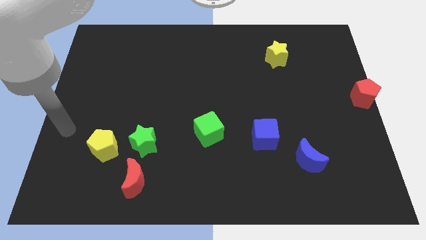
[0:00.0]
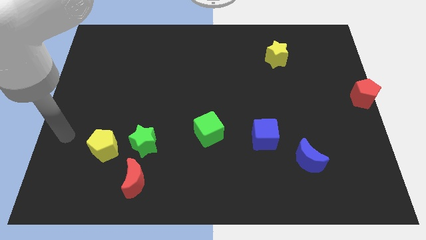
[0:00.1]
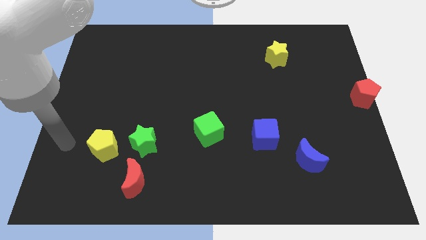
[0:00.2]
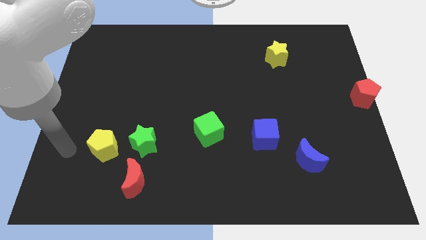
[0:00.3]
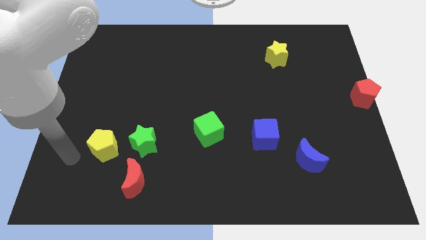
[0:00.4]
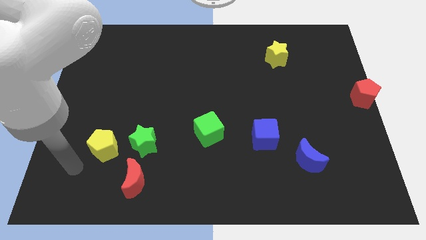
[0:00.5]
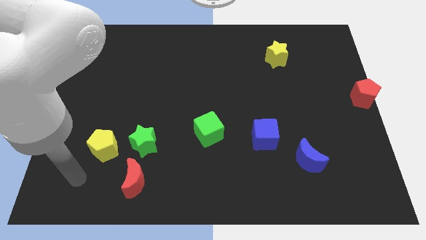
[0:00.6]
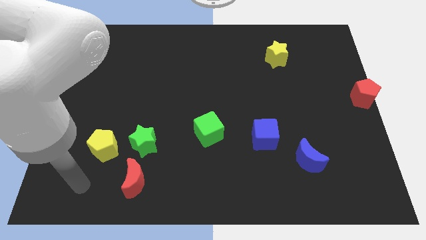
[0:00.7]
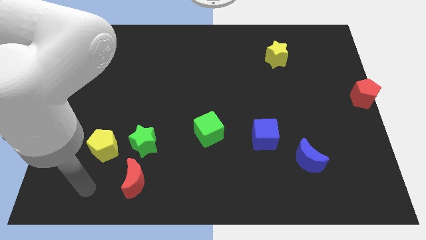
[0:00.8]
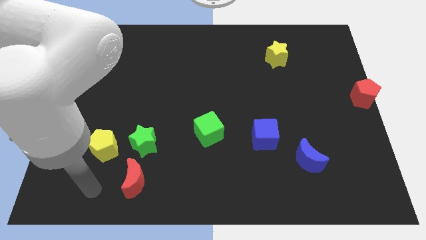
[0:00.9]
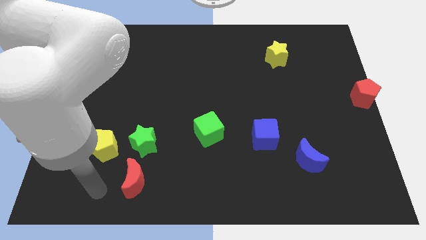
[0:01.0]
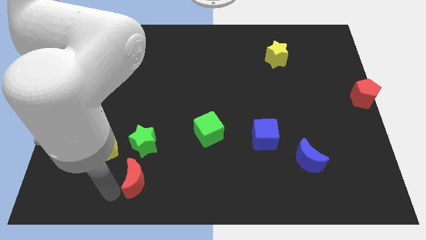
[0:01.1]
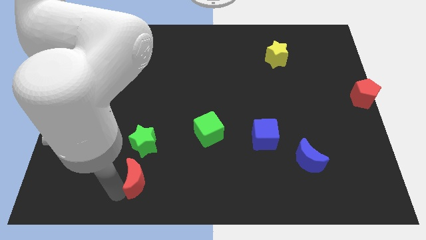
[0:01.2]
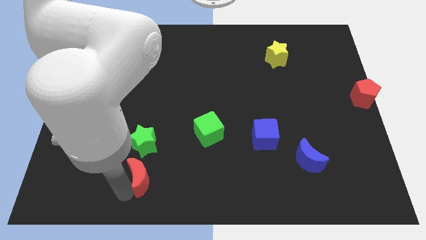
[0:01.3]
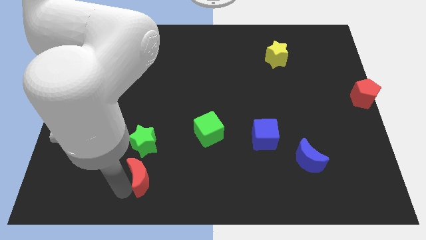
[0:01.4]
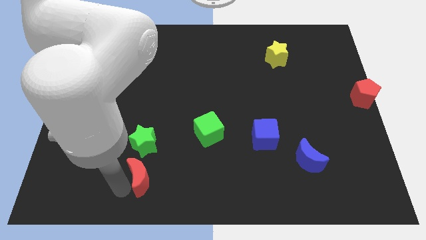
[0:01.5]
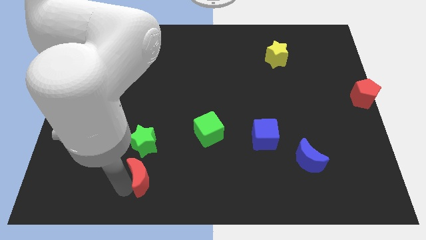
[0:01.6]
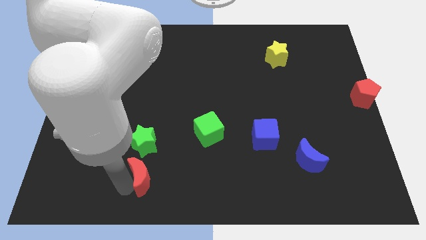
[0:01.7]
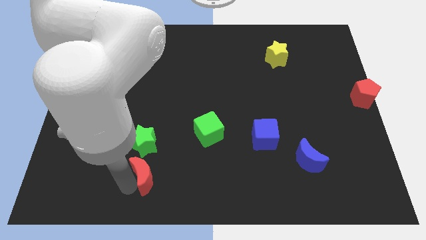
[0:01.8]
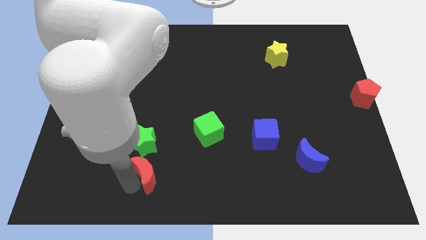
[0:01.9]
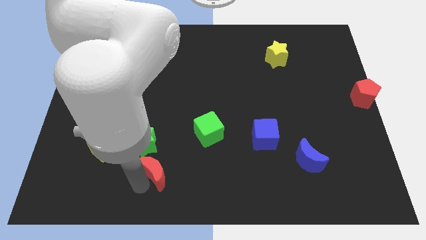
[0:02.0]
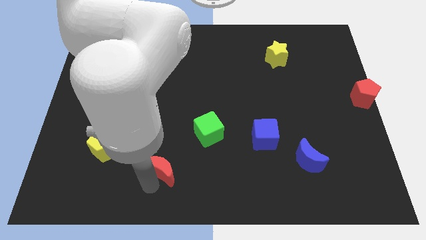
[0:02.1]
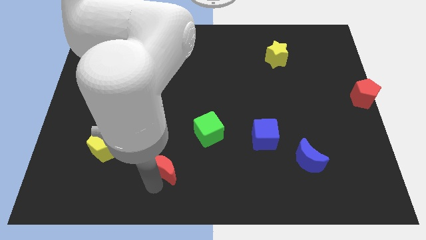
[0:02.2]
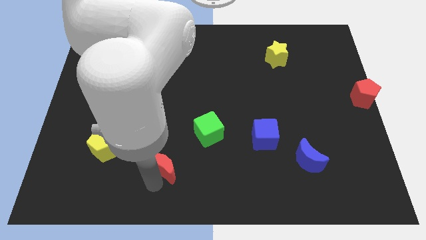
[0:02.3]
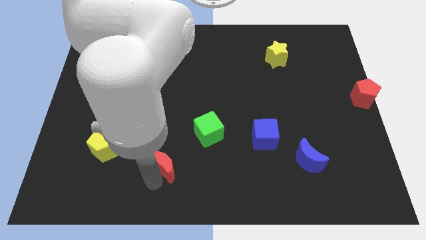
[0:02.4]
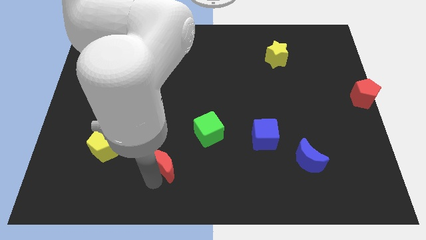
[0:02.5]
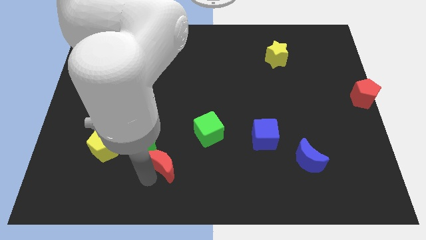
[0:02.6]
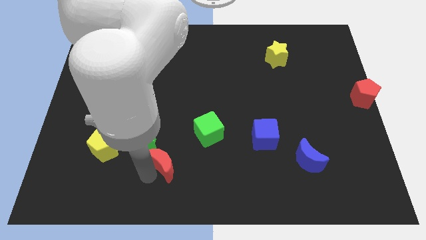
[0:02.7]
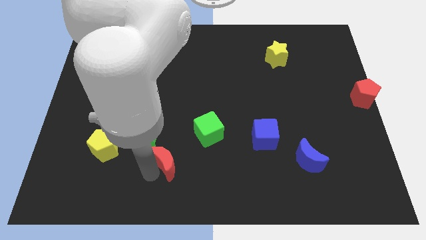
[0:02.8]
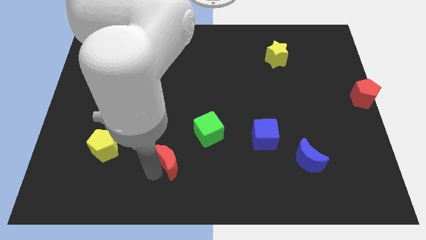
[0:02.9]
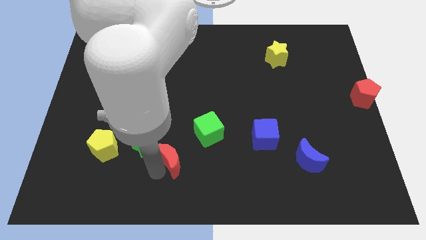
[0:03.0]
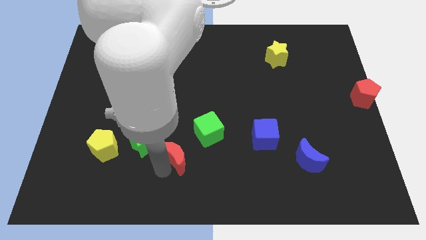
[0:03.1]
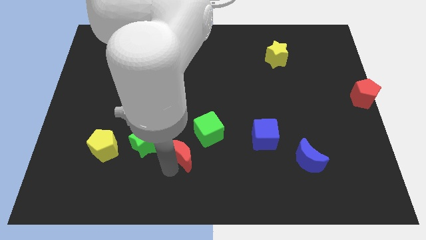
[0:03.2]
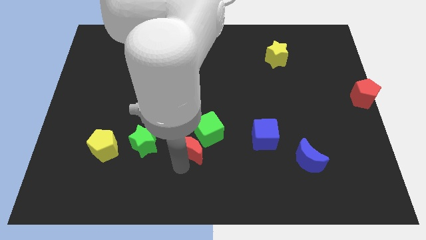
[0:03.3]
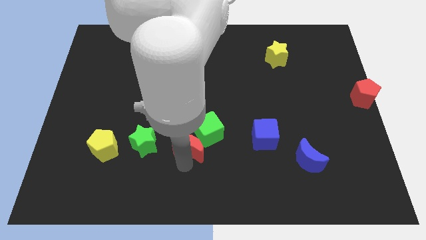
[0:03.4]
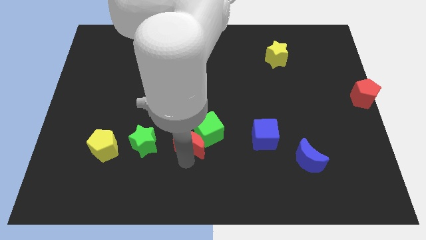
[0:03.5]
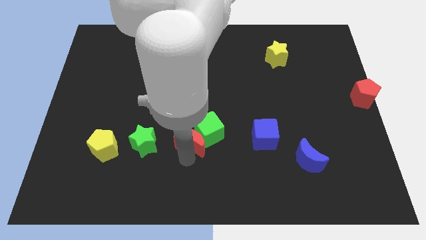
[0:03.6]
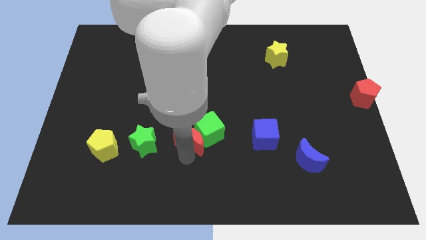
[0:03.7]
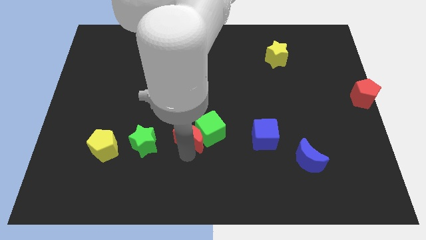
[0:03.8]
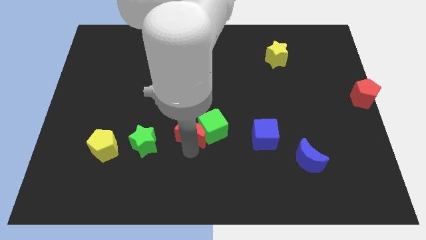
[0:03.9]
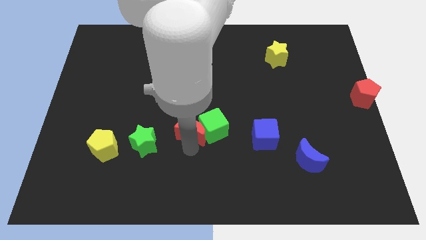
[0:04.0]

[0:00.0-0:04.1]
push red moon into green cube

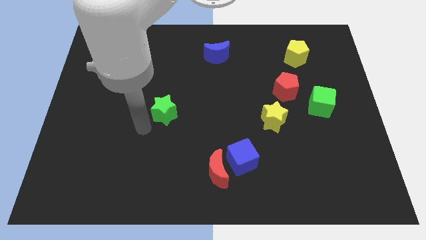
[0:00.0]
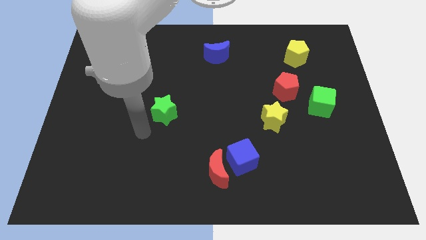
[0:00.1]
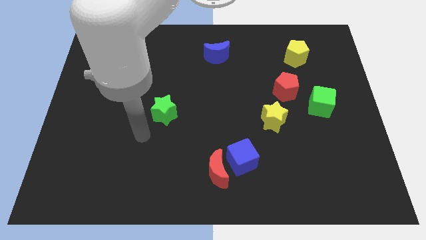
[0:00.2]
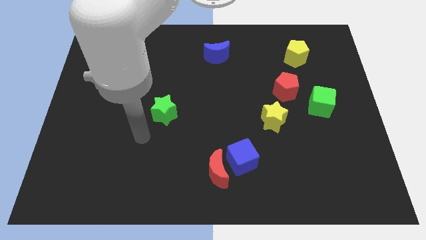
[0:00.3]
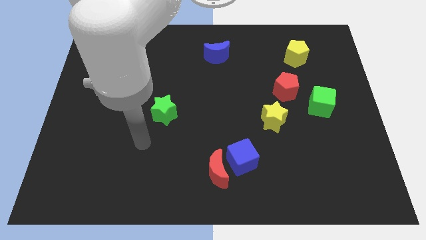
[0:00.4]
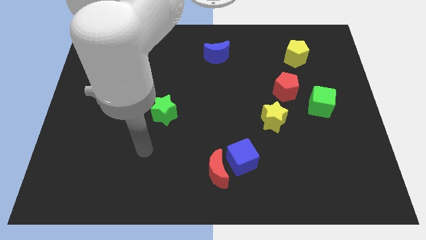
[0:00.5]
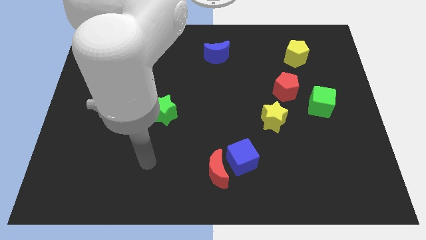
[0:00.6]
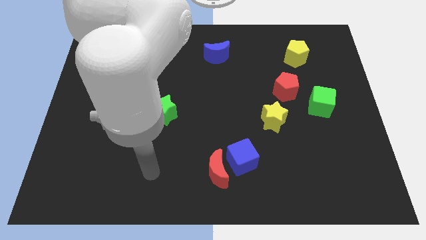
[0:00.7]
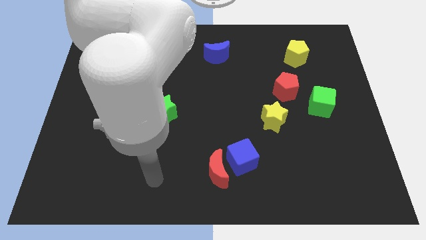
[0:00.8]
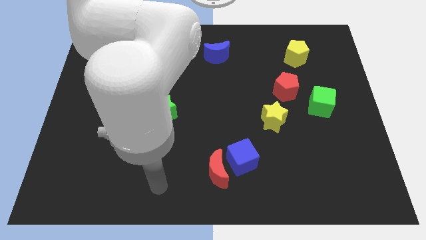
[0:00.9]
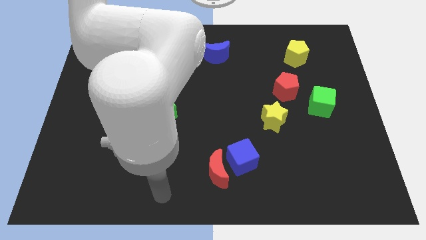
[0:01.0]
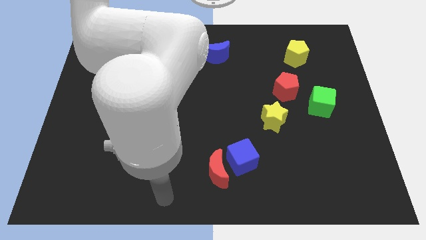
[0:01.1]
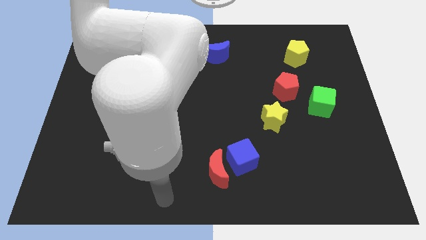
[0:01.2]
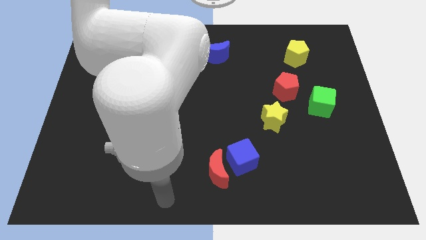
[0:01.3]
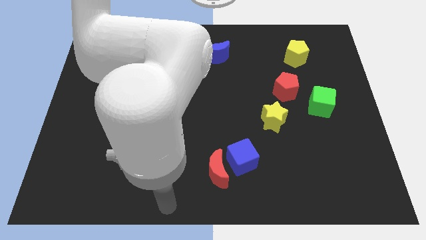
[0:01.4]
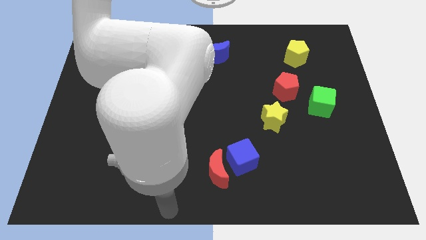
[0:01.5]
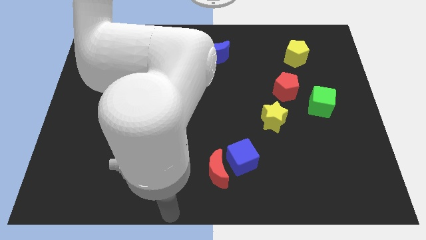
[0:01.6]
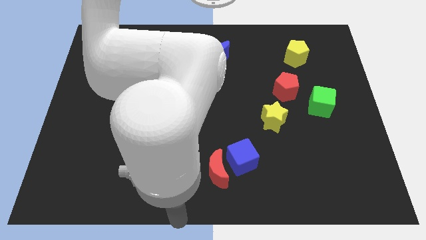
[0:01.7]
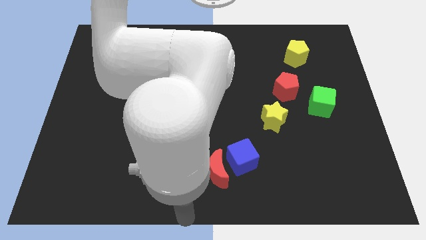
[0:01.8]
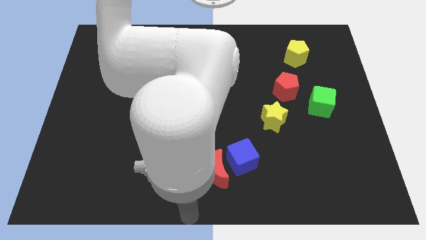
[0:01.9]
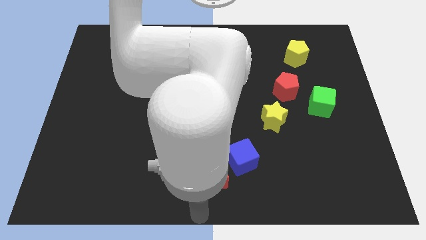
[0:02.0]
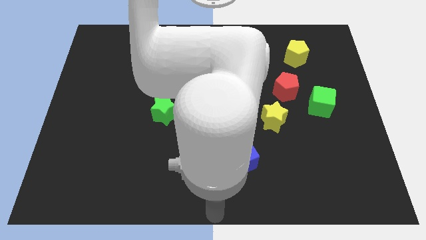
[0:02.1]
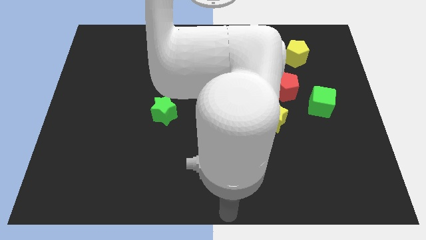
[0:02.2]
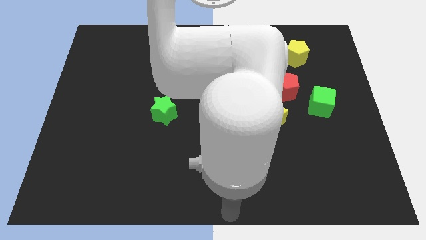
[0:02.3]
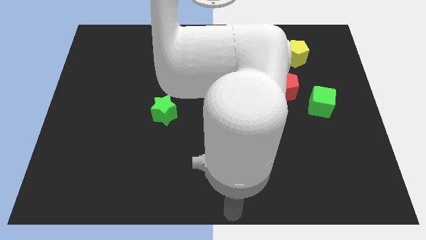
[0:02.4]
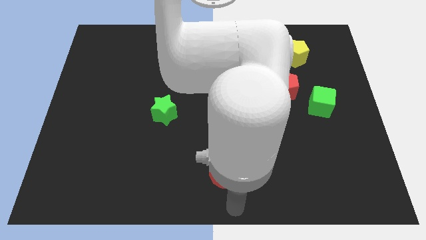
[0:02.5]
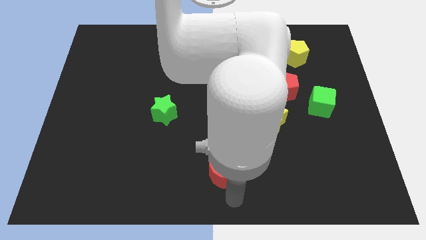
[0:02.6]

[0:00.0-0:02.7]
point your arm at the bottom center of the board

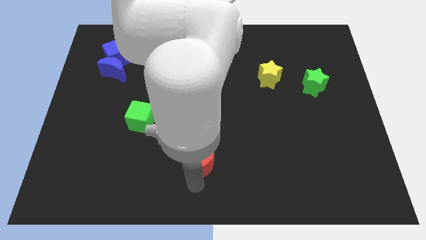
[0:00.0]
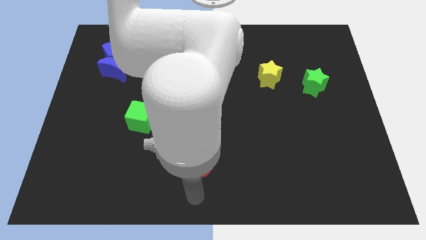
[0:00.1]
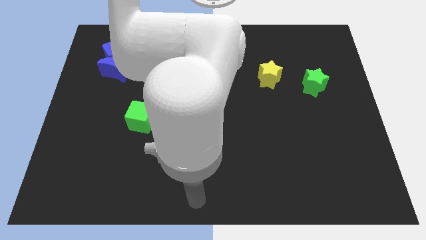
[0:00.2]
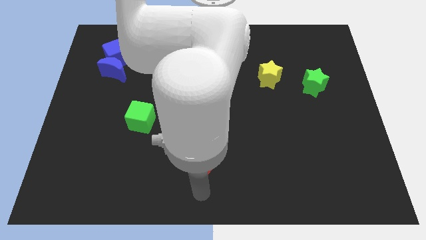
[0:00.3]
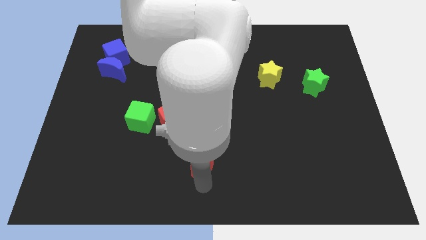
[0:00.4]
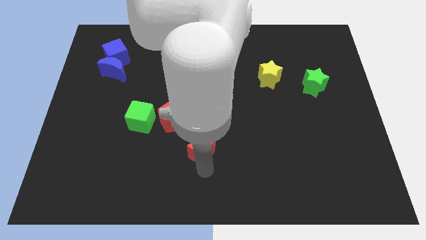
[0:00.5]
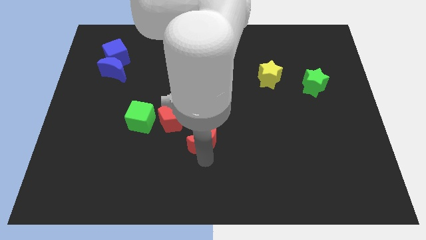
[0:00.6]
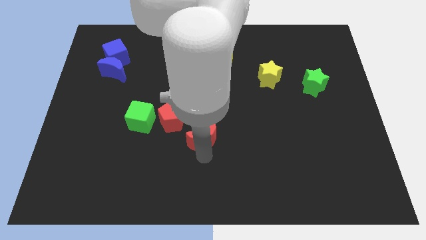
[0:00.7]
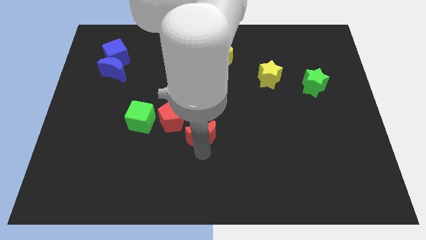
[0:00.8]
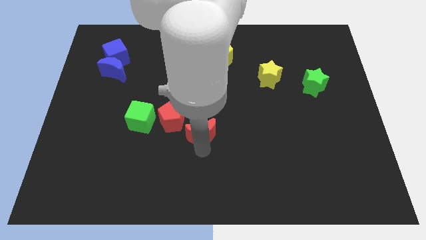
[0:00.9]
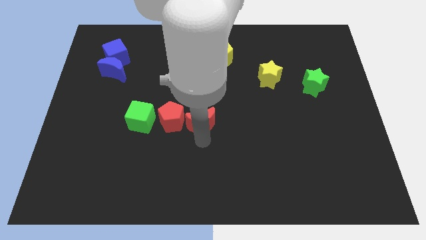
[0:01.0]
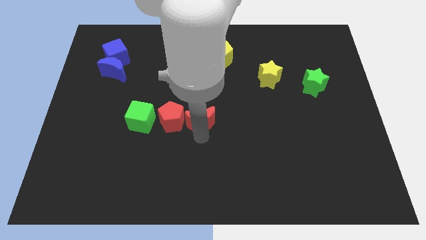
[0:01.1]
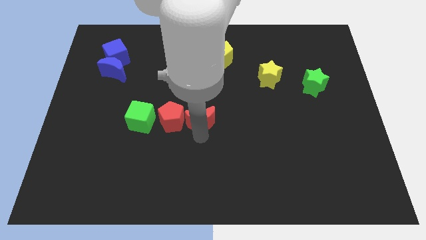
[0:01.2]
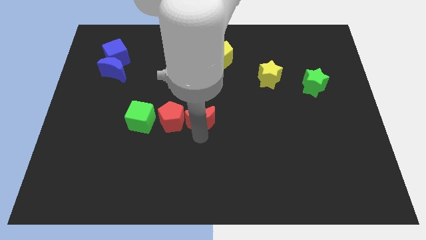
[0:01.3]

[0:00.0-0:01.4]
push the red moon to the right of the red pentagon

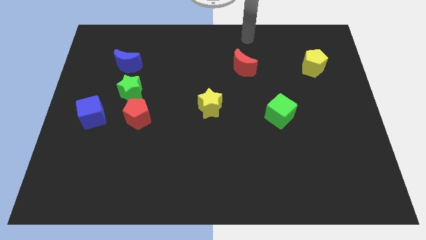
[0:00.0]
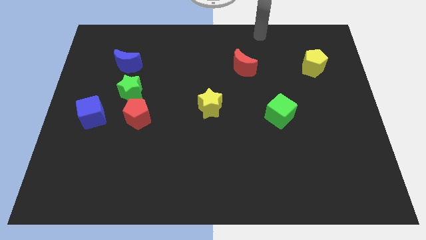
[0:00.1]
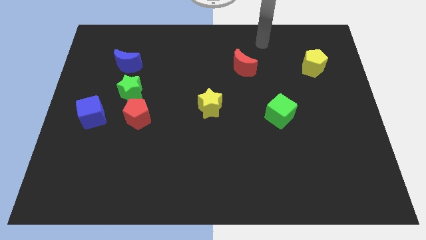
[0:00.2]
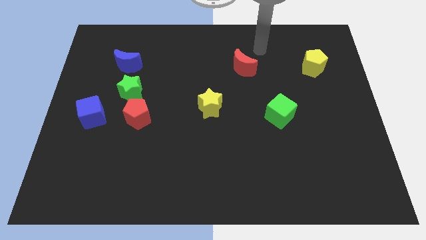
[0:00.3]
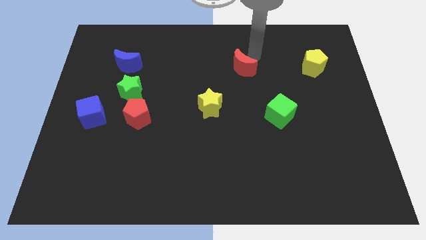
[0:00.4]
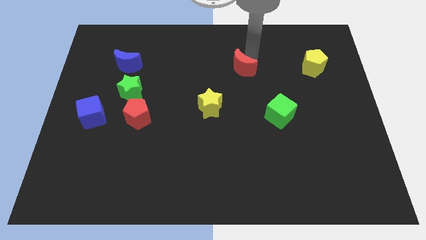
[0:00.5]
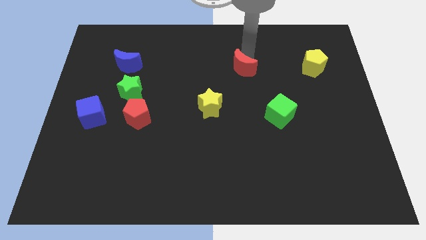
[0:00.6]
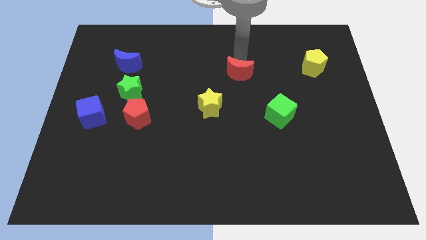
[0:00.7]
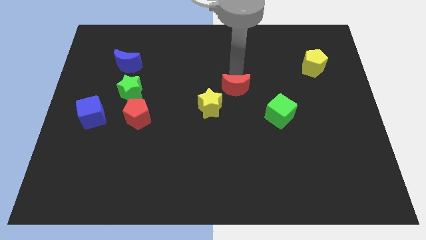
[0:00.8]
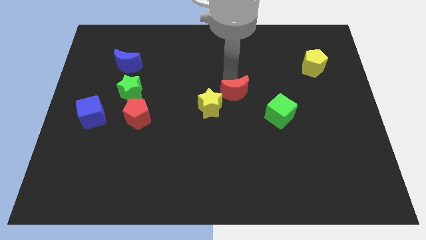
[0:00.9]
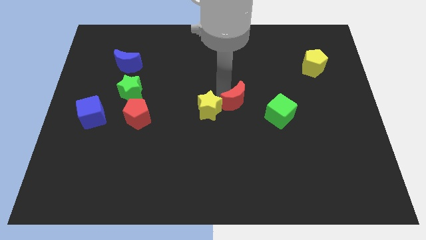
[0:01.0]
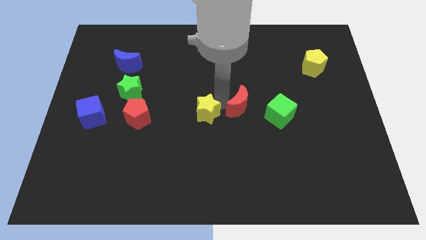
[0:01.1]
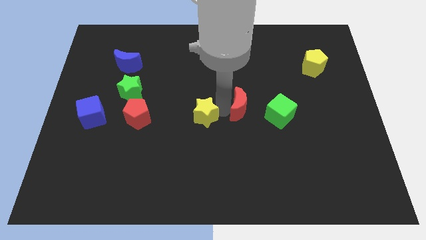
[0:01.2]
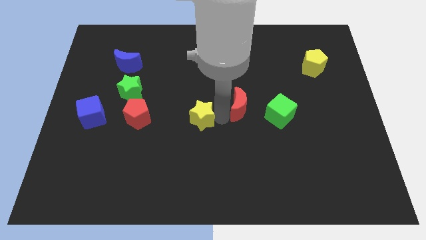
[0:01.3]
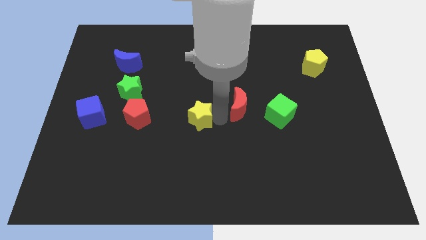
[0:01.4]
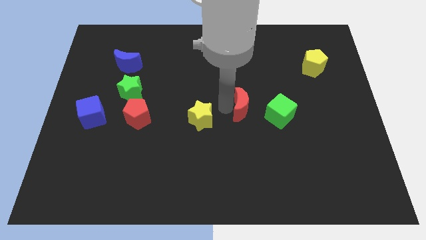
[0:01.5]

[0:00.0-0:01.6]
place red crescent left to the green cube
